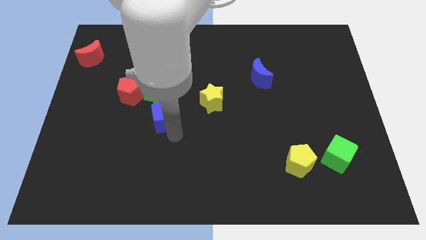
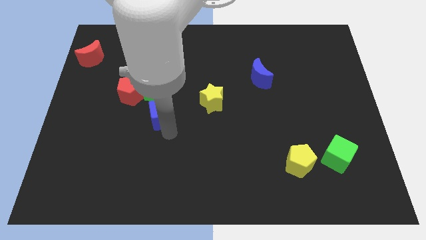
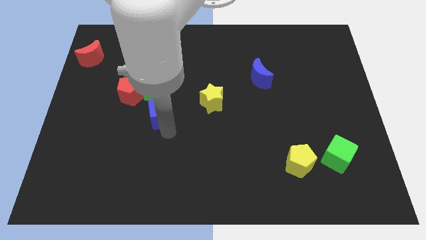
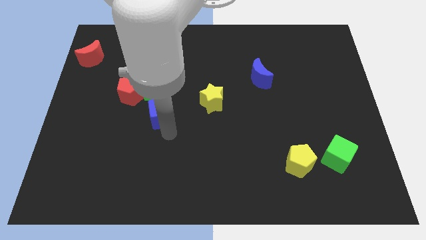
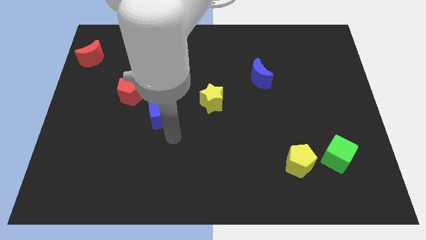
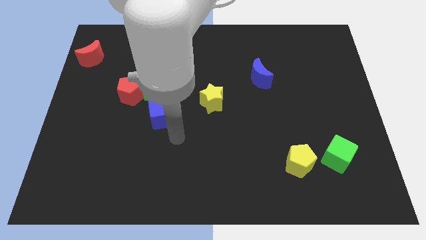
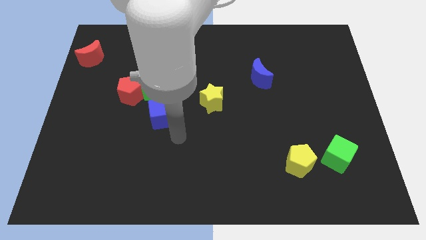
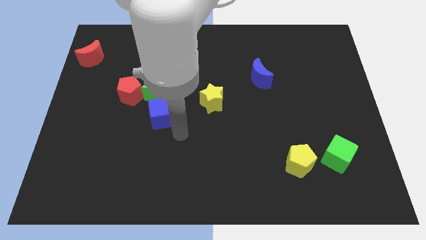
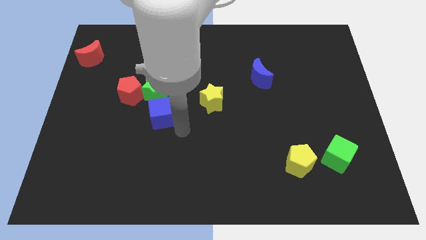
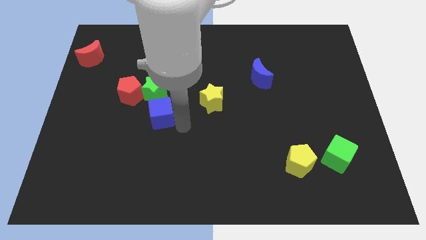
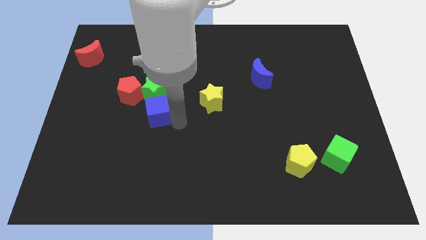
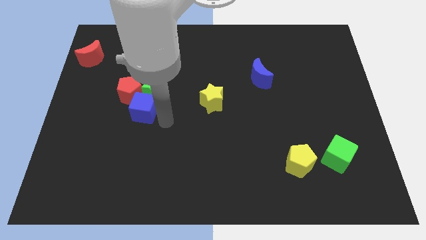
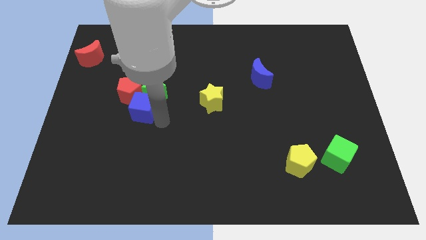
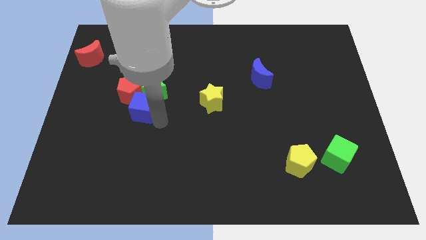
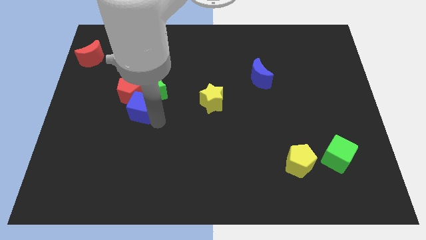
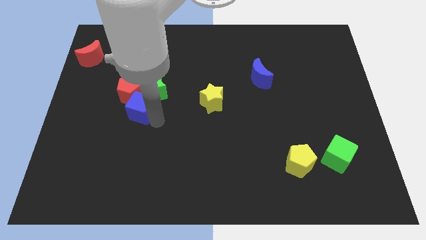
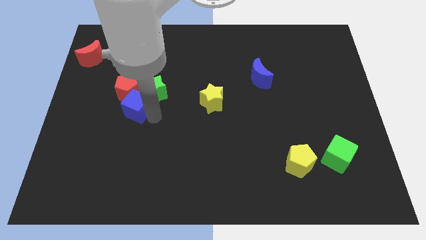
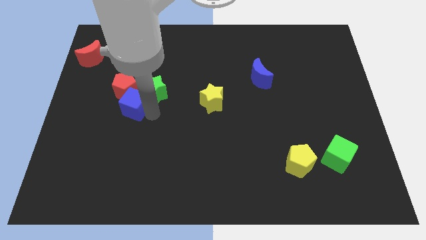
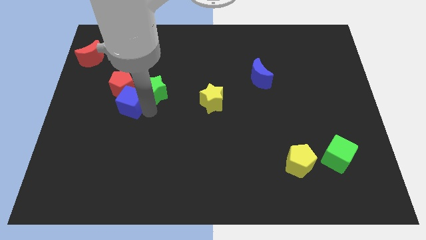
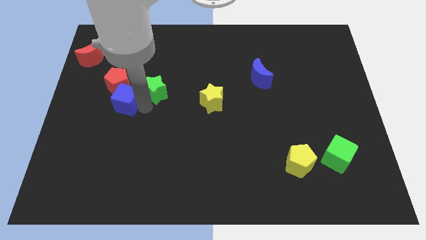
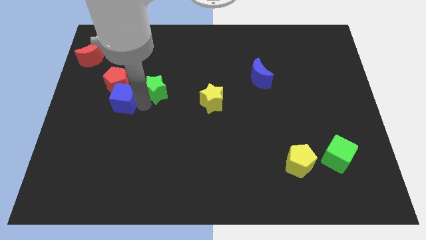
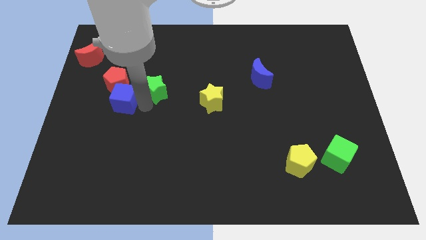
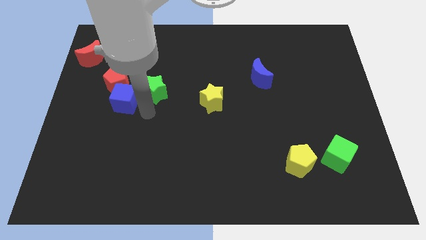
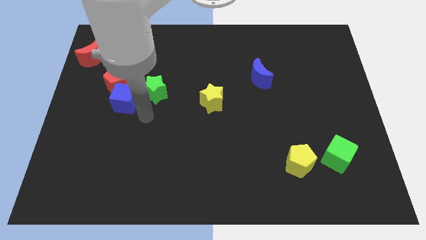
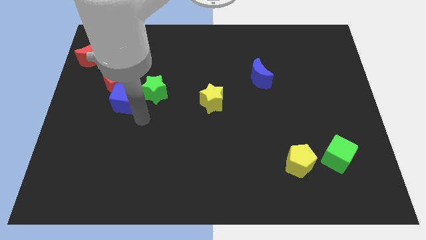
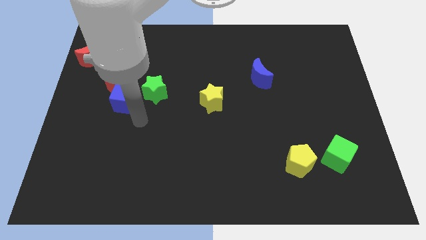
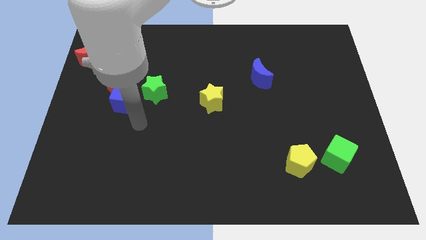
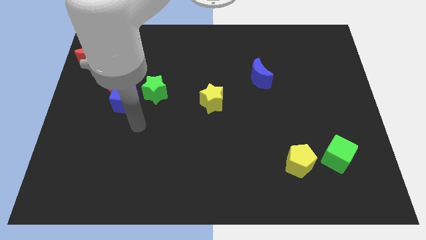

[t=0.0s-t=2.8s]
push the blue cube into the red pentagon to the top left of the board

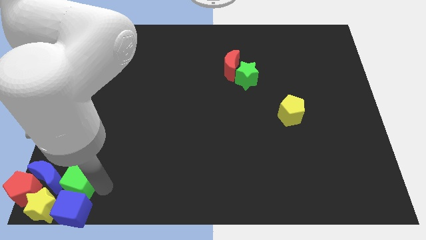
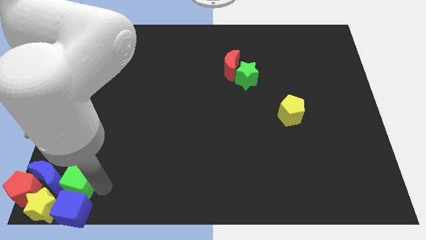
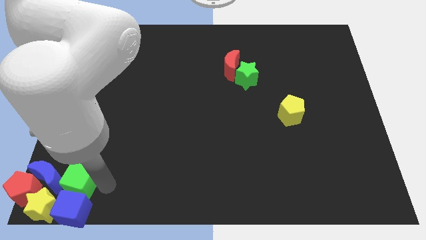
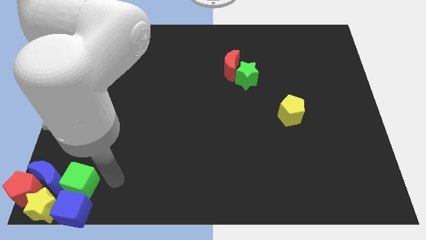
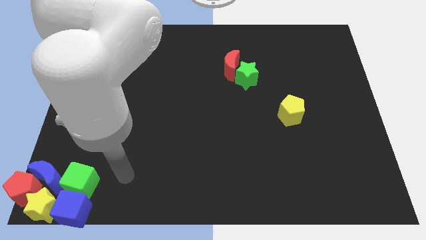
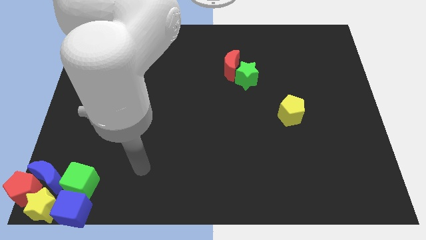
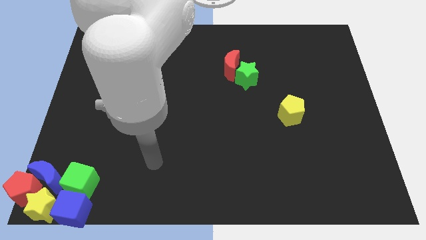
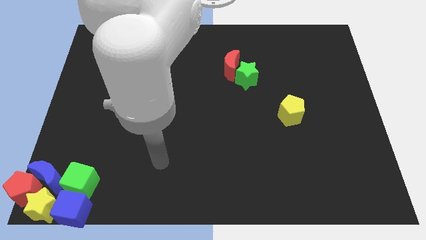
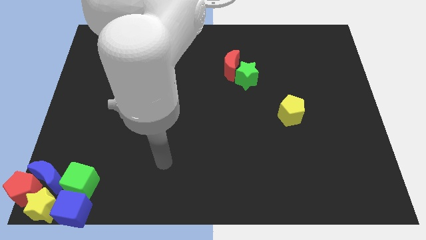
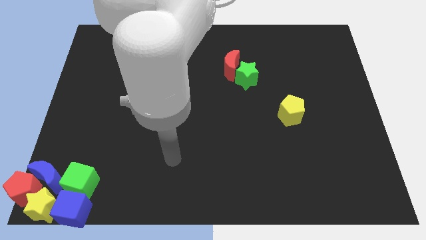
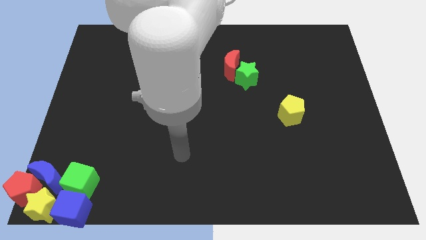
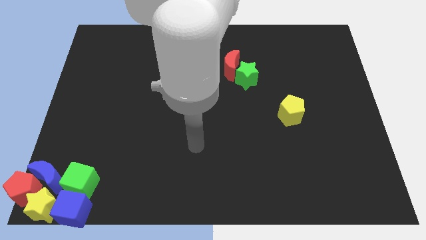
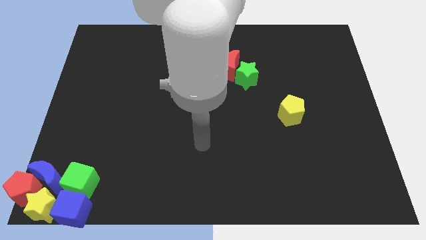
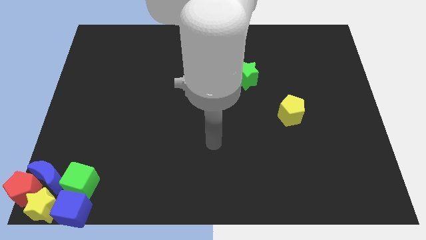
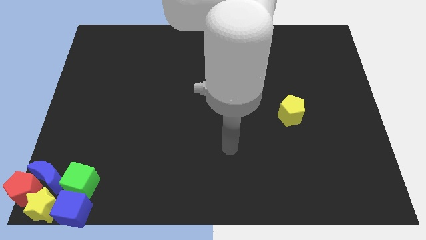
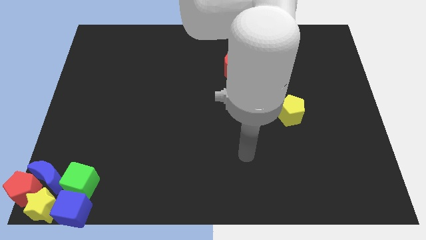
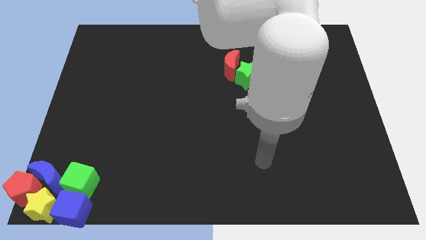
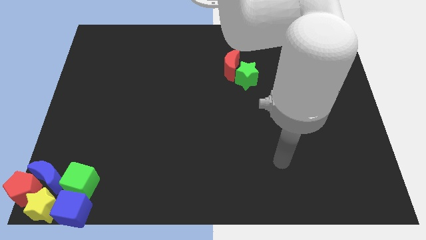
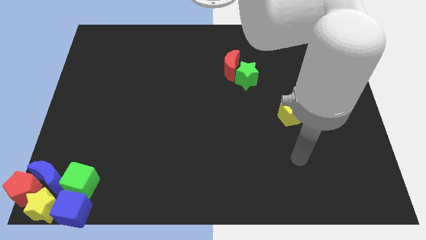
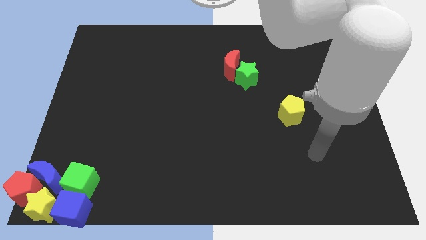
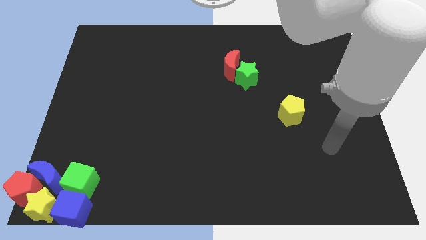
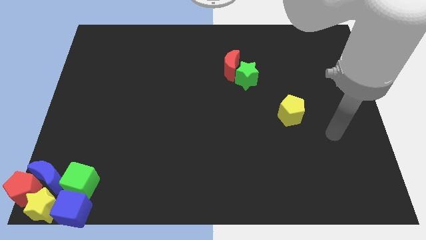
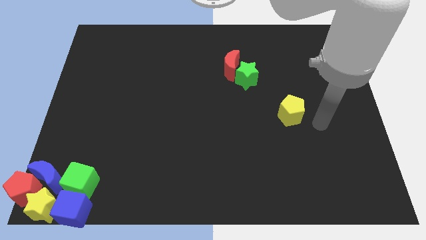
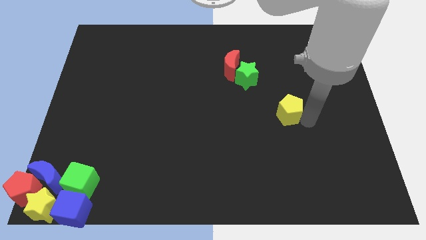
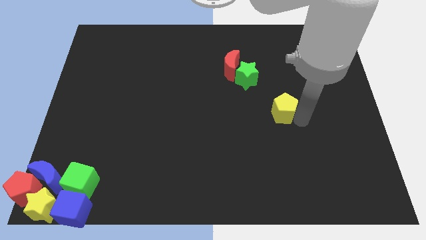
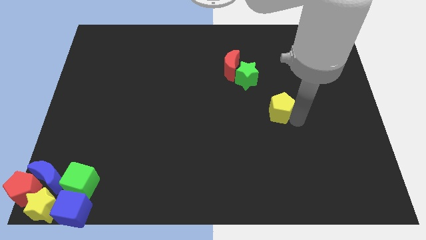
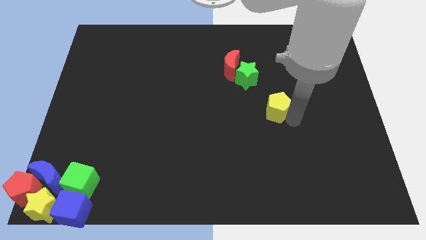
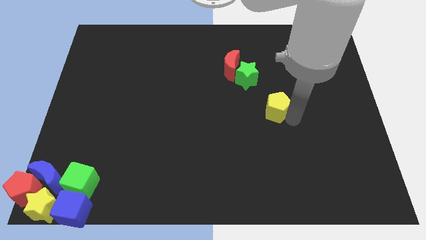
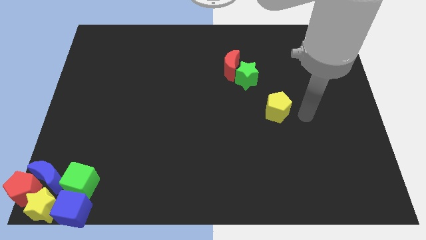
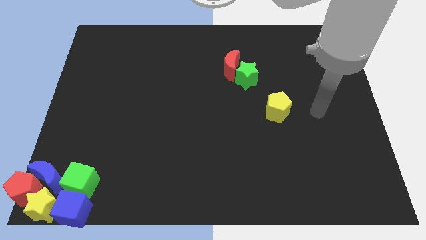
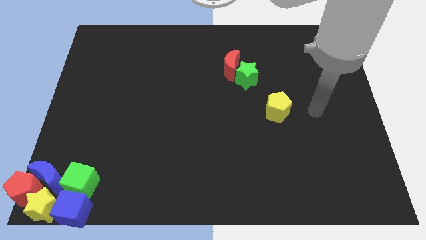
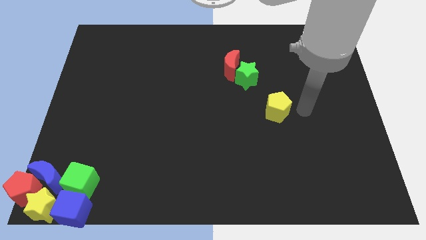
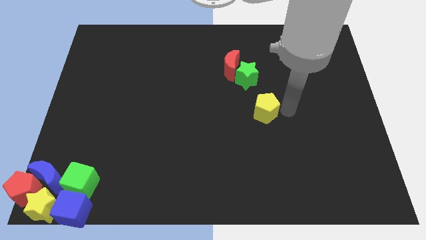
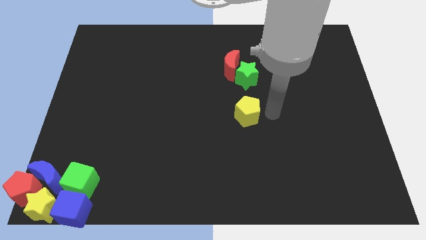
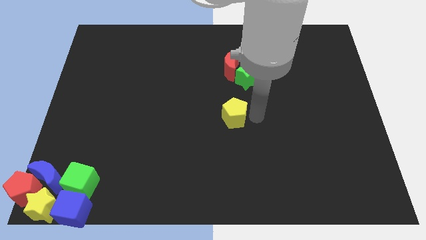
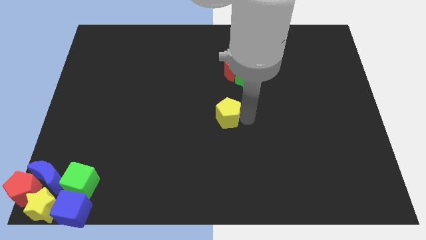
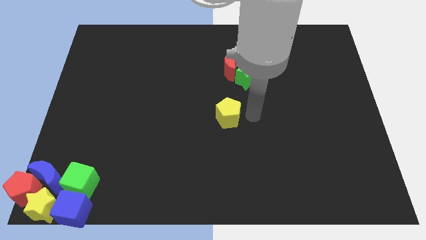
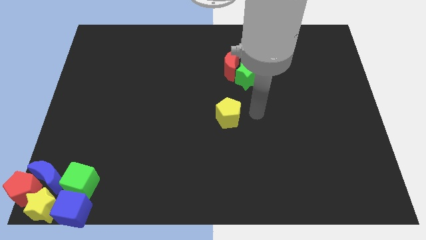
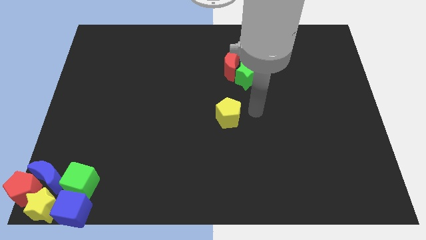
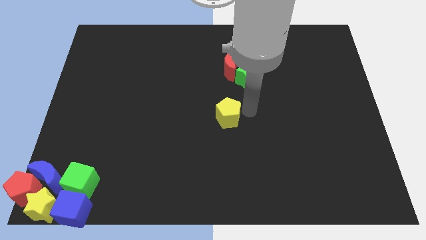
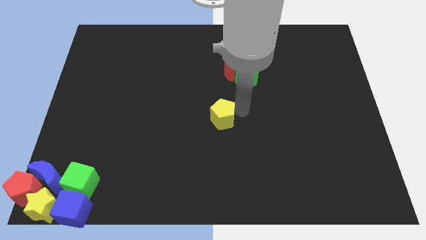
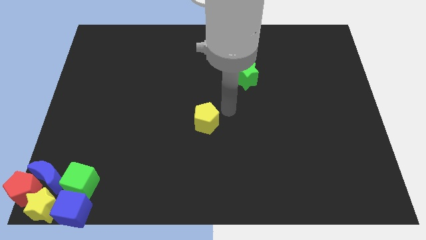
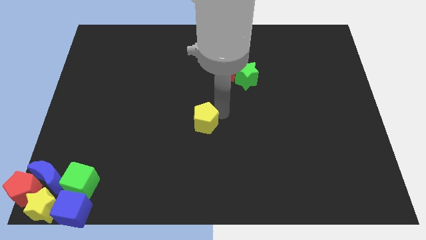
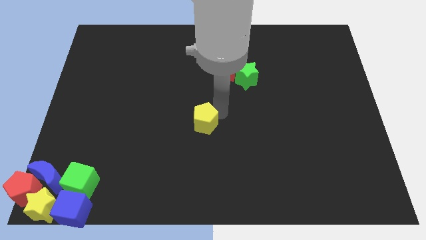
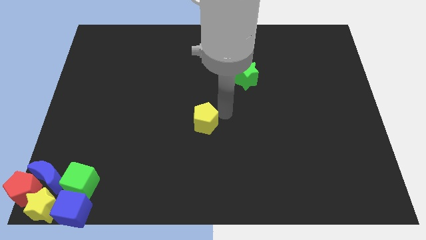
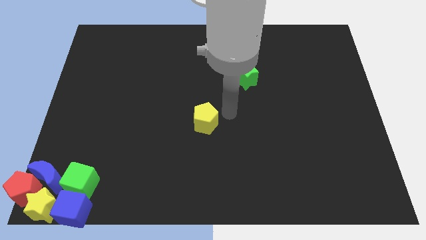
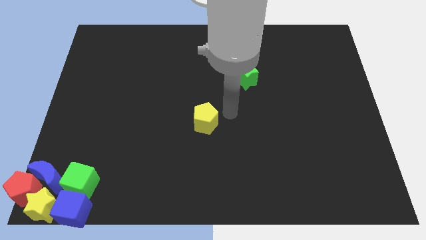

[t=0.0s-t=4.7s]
place the yellow pentagon at the center of the table

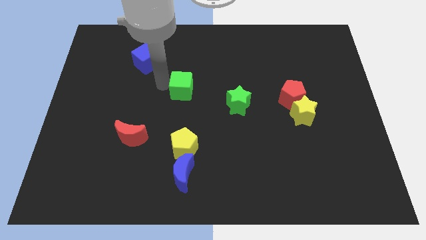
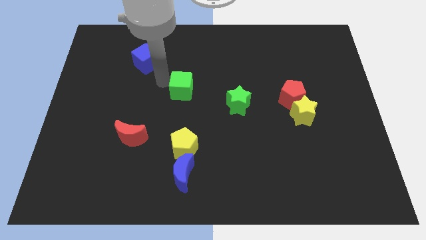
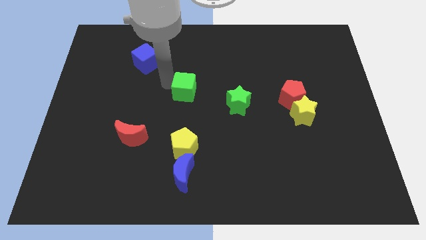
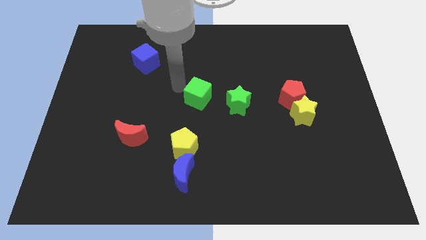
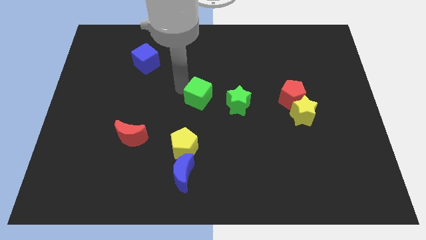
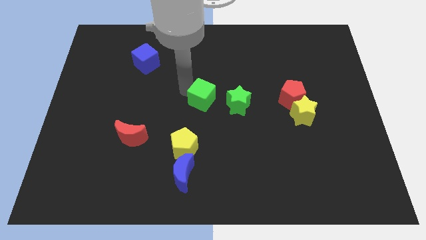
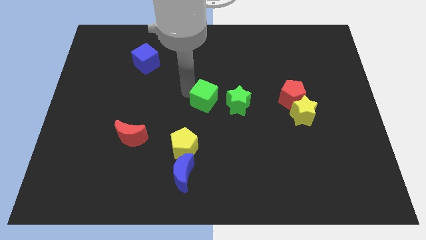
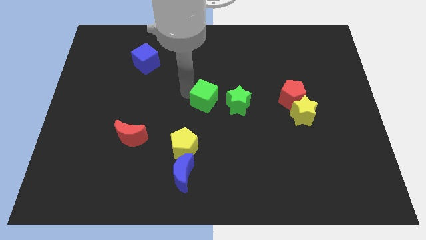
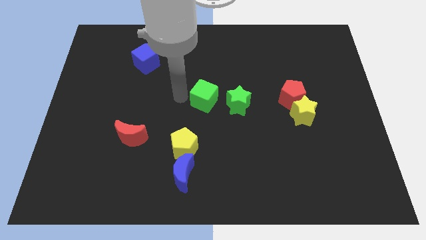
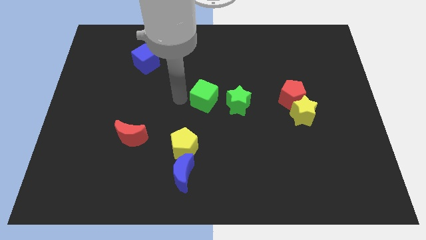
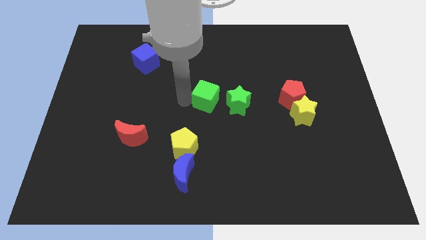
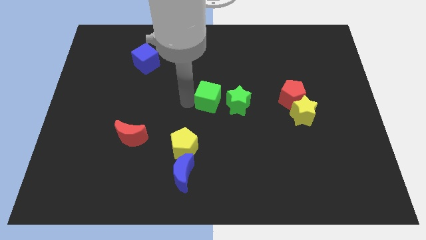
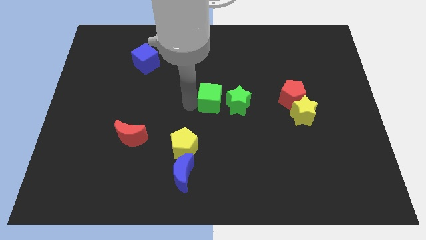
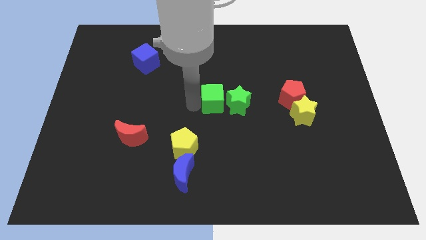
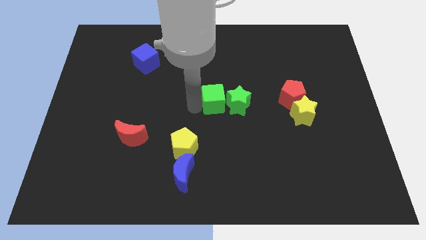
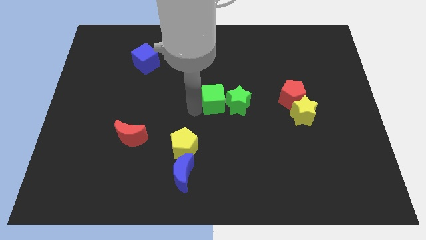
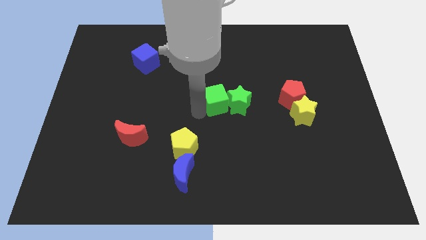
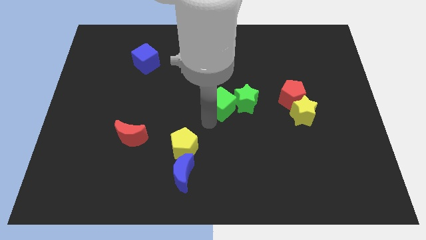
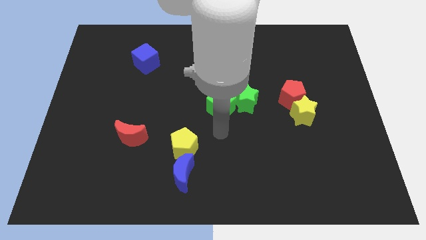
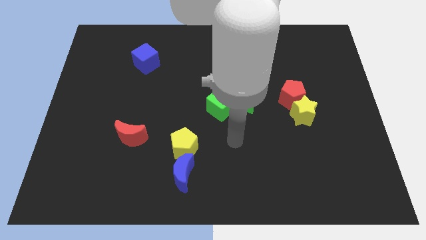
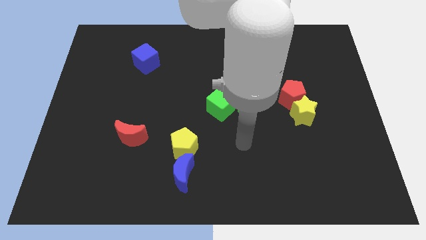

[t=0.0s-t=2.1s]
push green cube to the center
